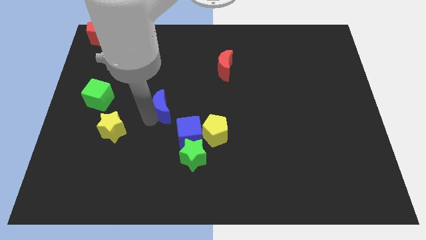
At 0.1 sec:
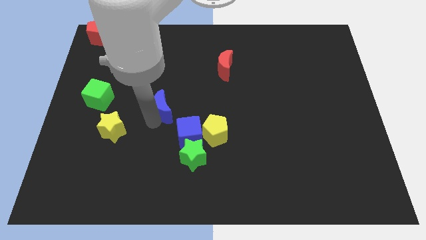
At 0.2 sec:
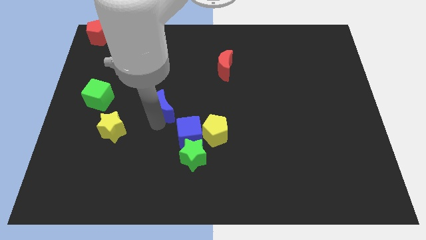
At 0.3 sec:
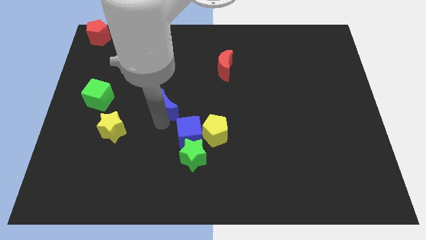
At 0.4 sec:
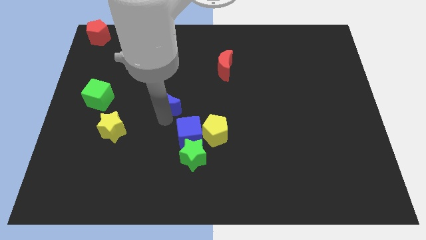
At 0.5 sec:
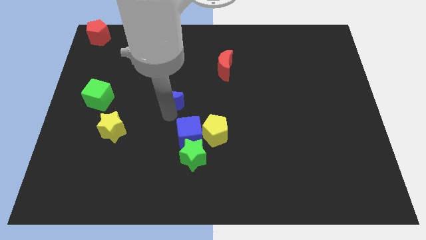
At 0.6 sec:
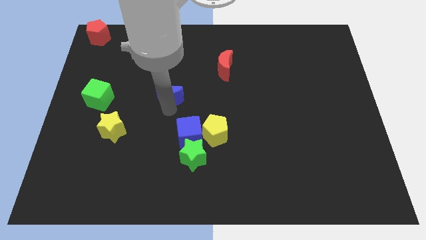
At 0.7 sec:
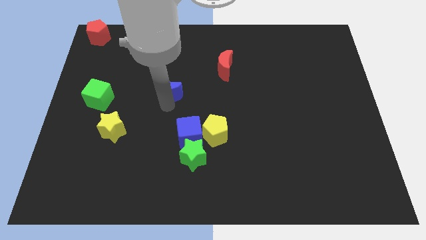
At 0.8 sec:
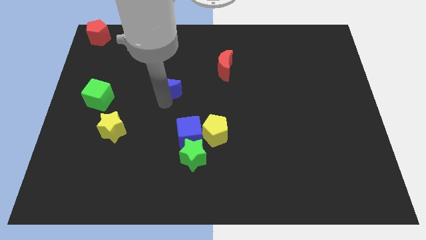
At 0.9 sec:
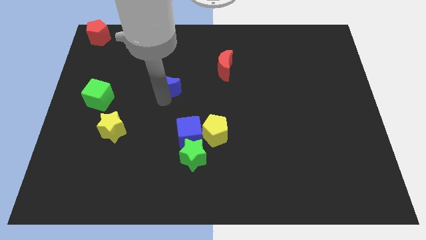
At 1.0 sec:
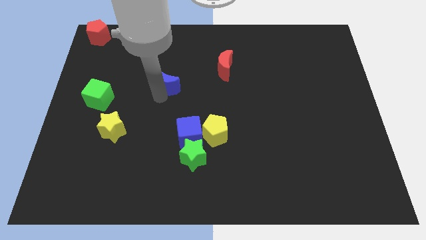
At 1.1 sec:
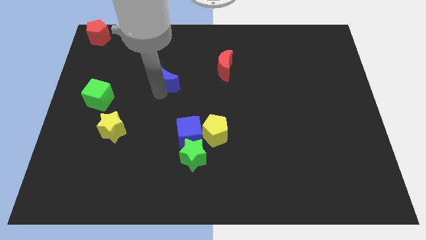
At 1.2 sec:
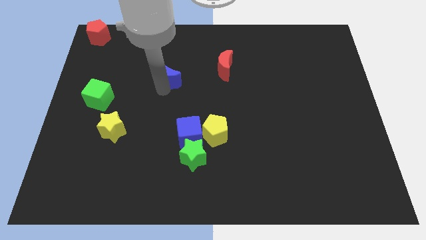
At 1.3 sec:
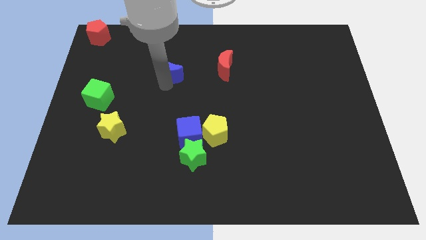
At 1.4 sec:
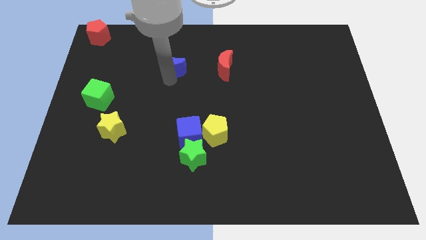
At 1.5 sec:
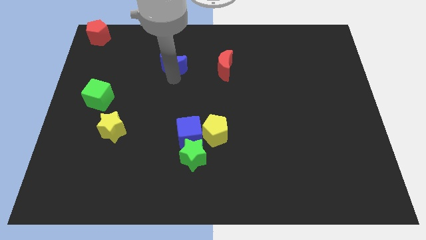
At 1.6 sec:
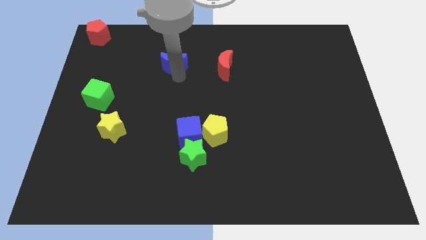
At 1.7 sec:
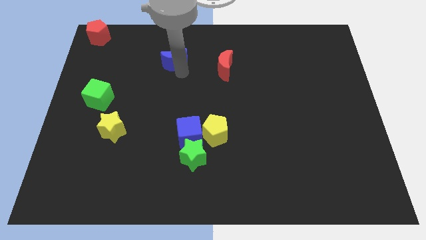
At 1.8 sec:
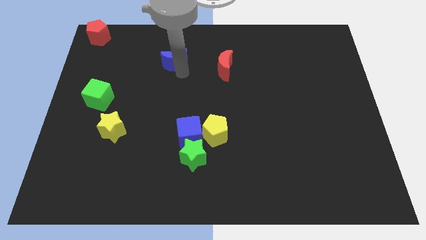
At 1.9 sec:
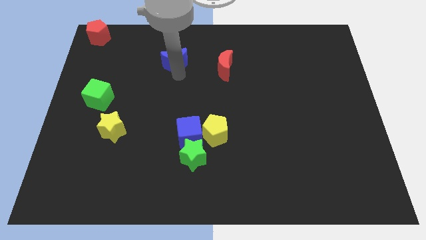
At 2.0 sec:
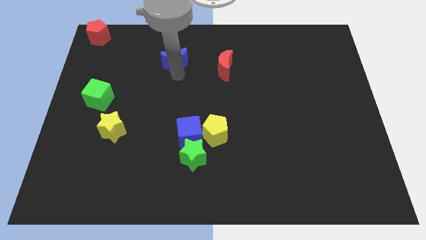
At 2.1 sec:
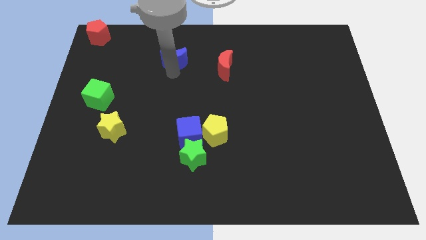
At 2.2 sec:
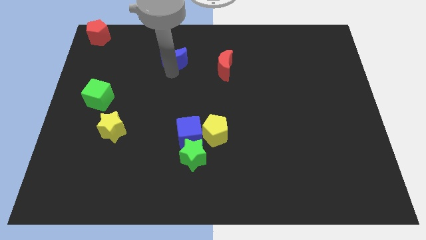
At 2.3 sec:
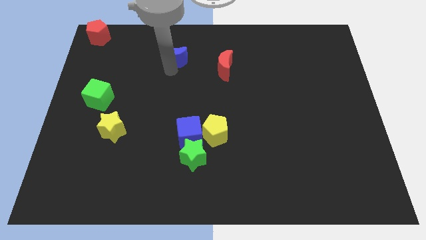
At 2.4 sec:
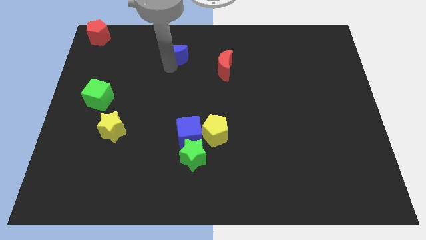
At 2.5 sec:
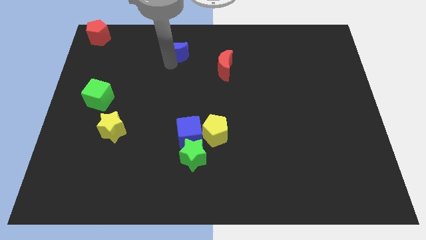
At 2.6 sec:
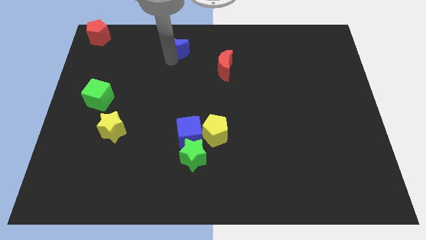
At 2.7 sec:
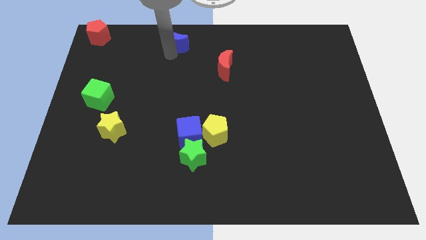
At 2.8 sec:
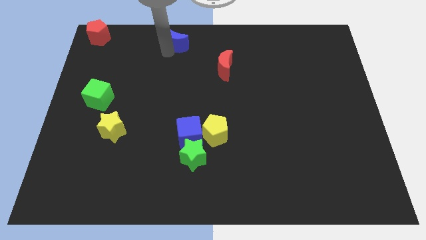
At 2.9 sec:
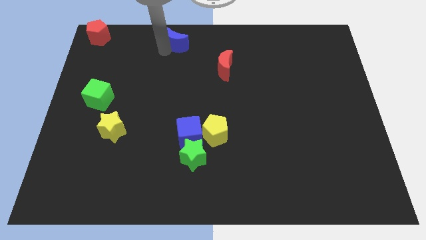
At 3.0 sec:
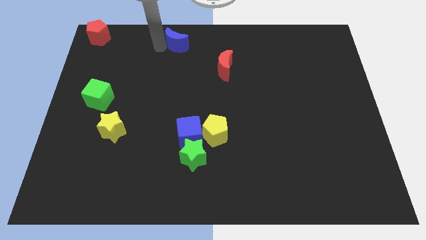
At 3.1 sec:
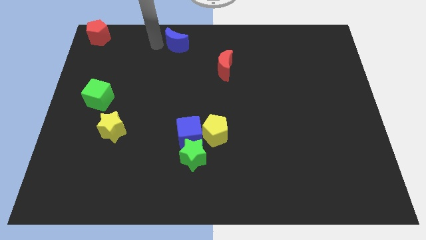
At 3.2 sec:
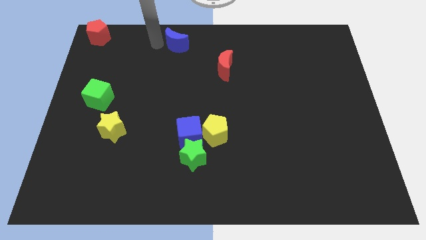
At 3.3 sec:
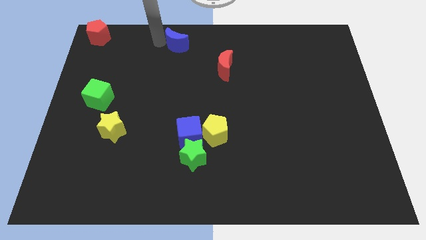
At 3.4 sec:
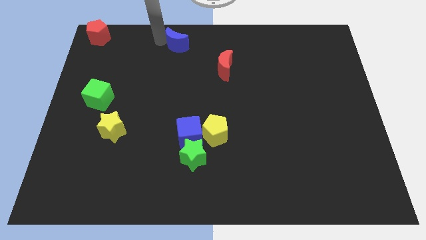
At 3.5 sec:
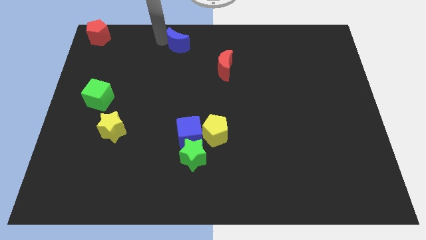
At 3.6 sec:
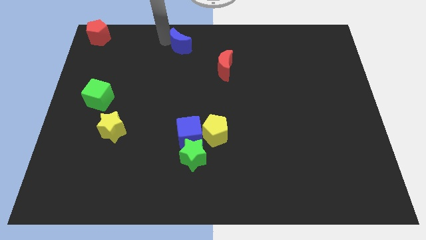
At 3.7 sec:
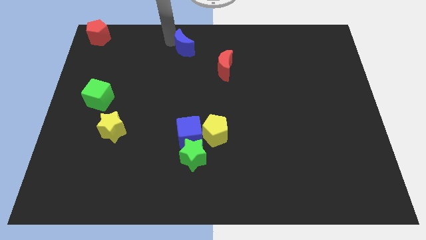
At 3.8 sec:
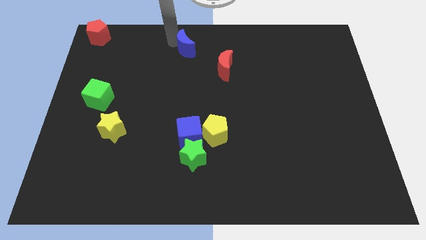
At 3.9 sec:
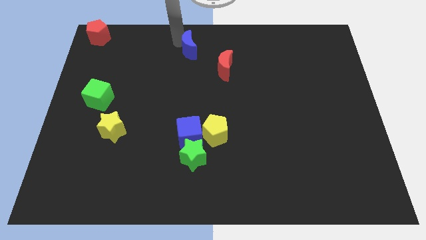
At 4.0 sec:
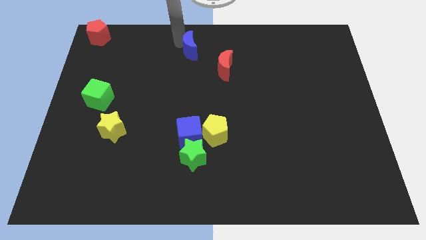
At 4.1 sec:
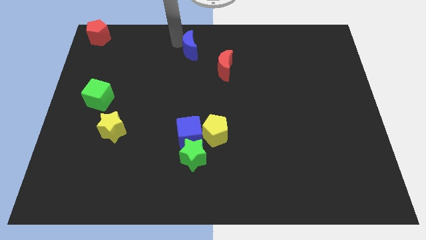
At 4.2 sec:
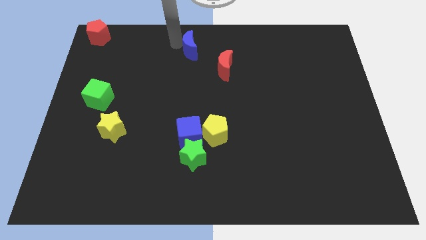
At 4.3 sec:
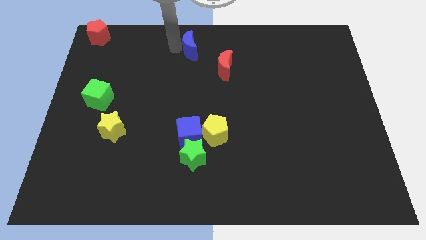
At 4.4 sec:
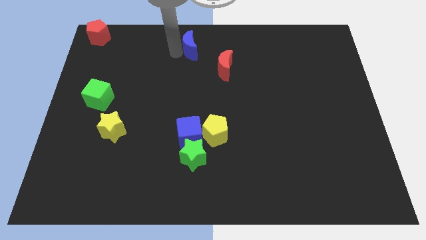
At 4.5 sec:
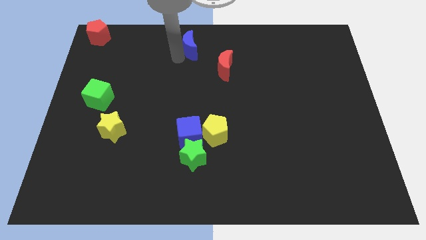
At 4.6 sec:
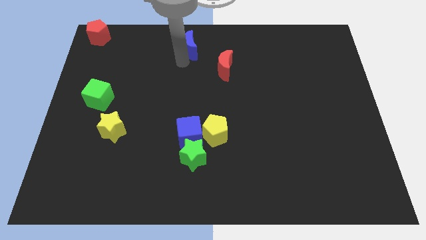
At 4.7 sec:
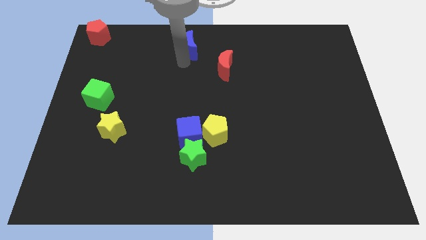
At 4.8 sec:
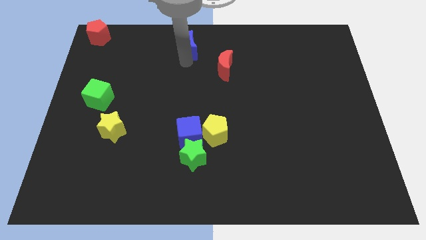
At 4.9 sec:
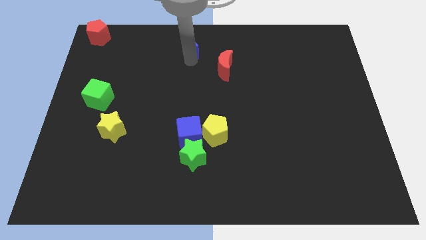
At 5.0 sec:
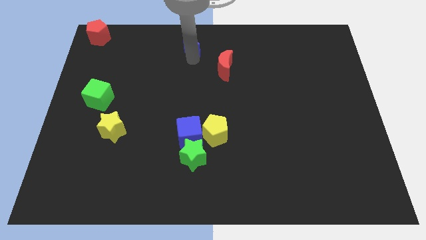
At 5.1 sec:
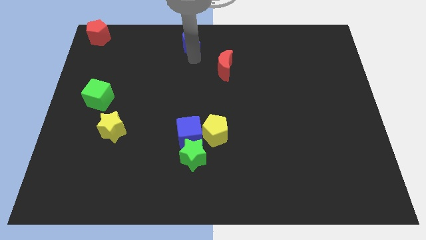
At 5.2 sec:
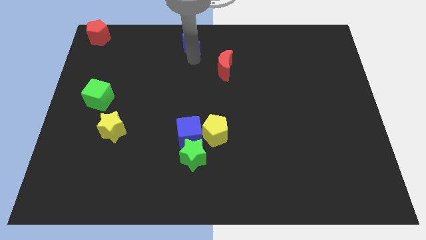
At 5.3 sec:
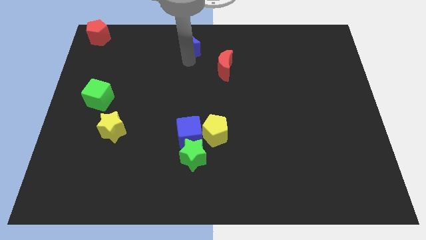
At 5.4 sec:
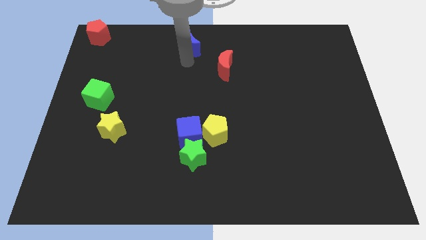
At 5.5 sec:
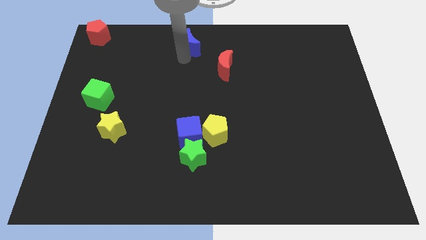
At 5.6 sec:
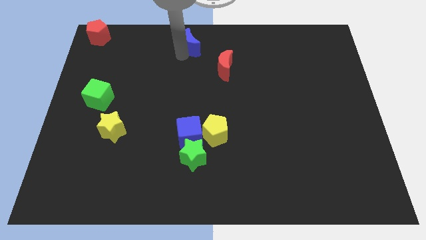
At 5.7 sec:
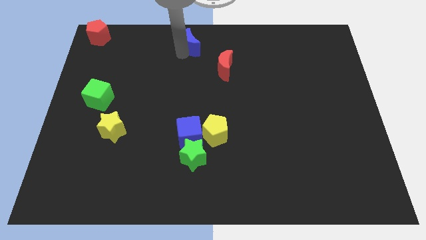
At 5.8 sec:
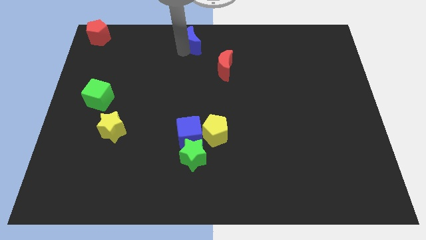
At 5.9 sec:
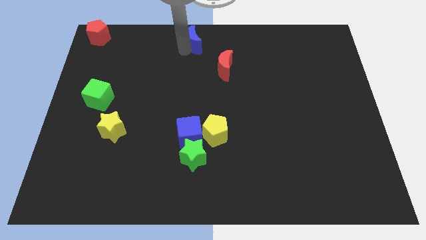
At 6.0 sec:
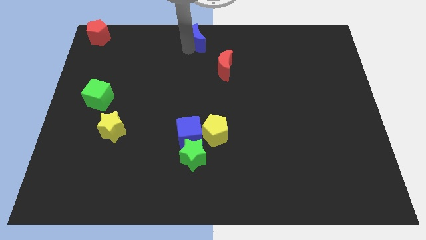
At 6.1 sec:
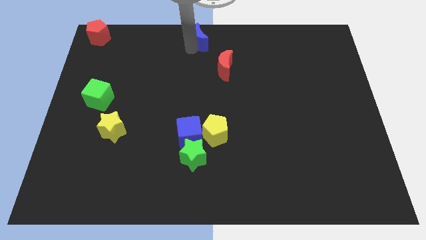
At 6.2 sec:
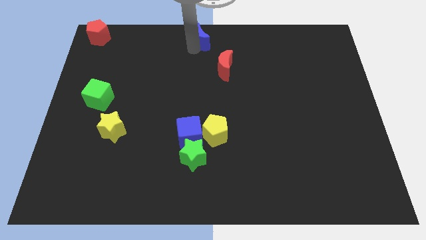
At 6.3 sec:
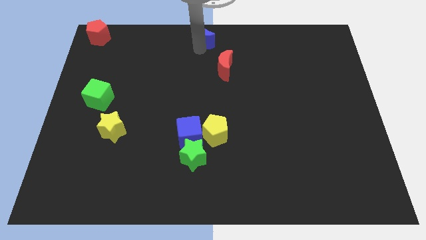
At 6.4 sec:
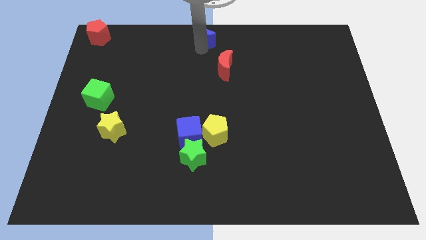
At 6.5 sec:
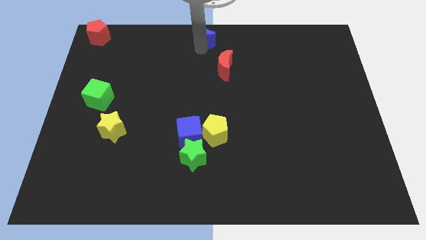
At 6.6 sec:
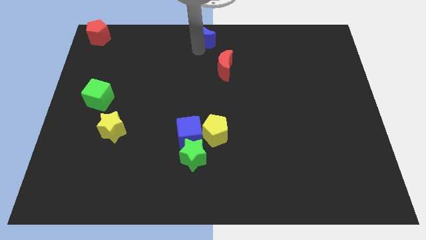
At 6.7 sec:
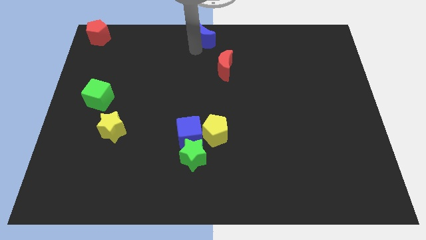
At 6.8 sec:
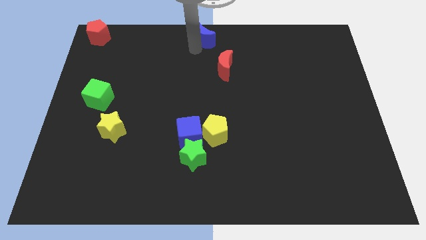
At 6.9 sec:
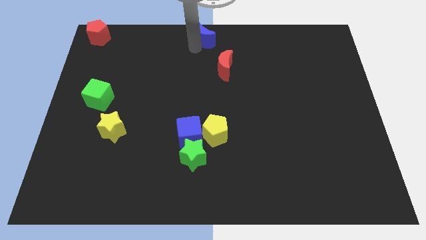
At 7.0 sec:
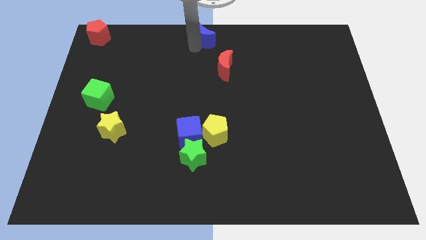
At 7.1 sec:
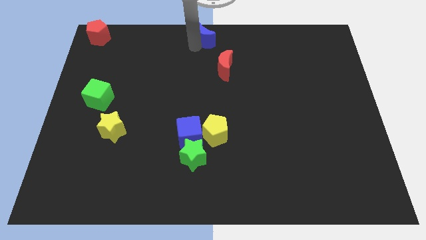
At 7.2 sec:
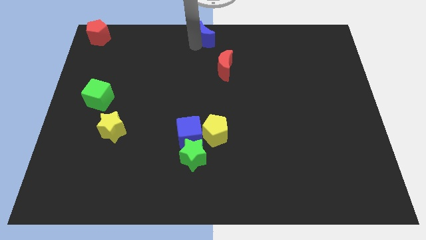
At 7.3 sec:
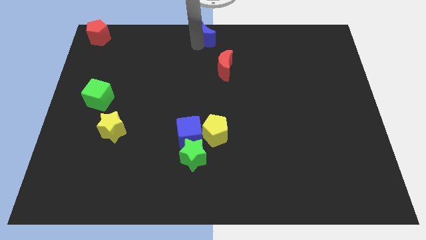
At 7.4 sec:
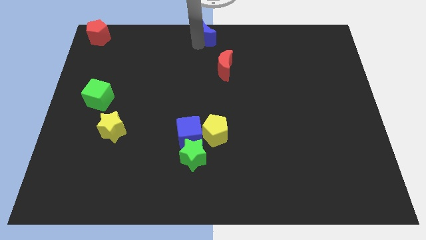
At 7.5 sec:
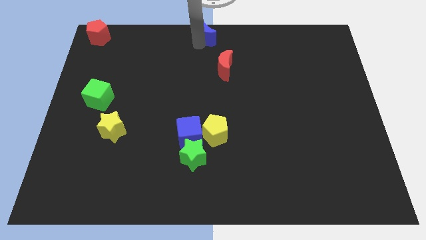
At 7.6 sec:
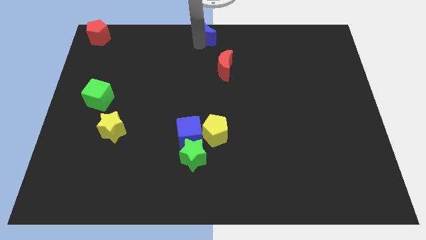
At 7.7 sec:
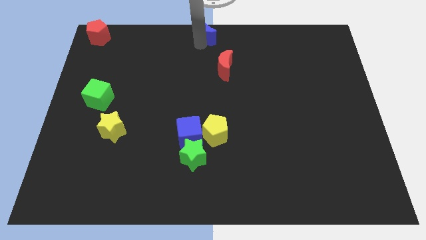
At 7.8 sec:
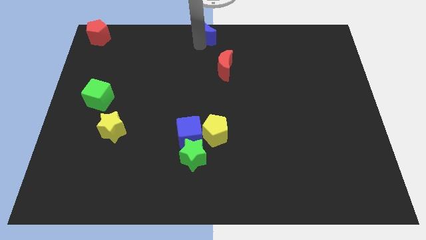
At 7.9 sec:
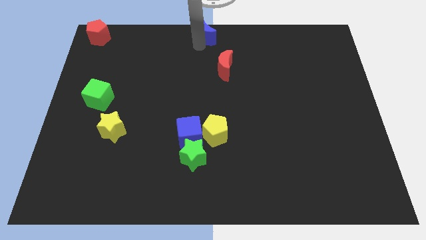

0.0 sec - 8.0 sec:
move the blue crescent to the top center on the board

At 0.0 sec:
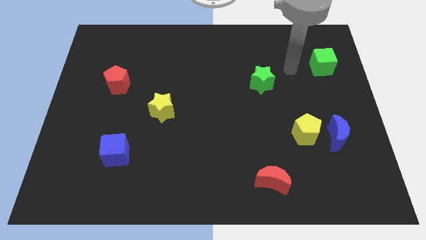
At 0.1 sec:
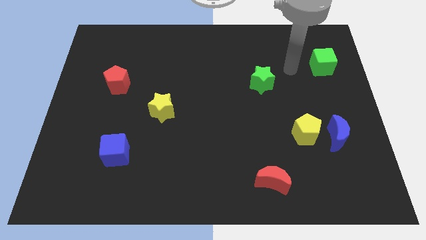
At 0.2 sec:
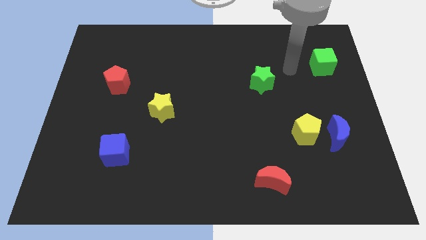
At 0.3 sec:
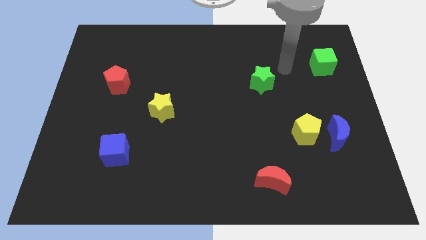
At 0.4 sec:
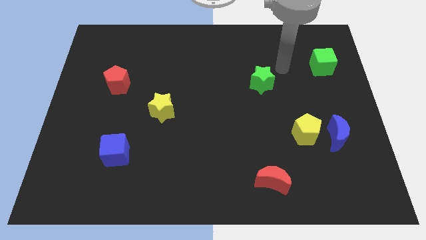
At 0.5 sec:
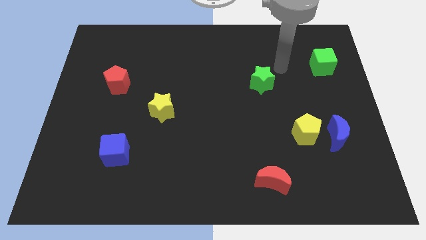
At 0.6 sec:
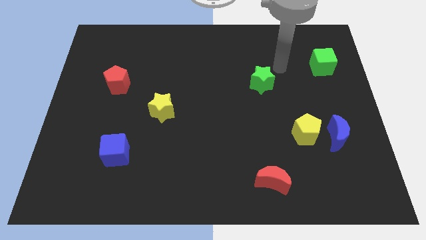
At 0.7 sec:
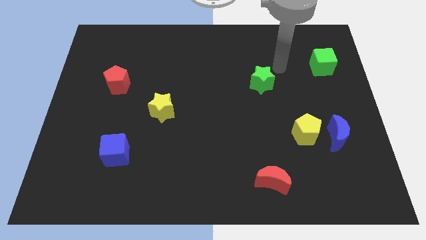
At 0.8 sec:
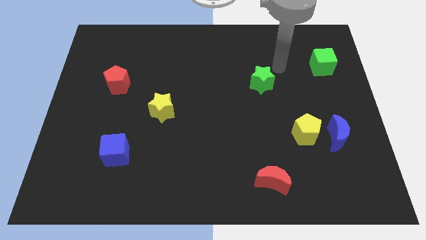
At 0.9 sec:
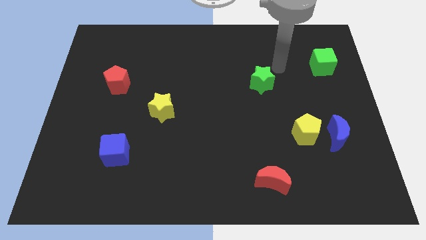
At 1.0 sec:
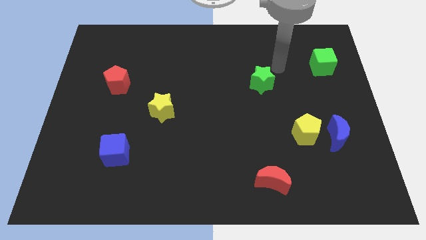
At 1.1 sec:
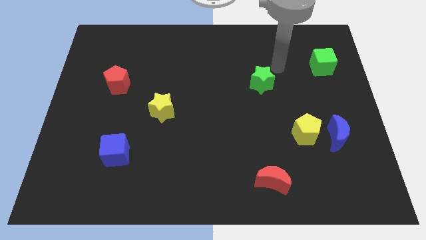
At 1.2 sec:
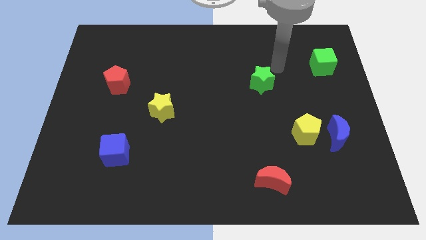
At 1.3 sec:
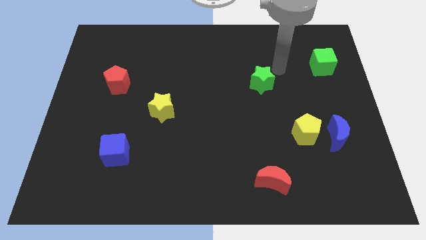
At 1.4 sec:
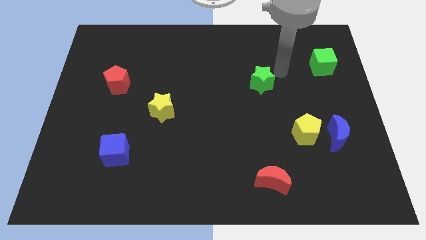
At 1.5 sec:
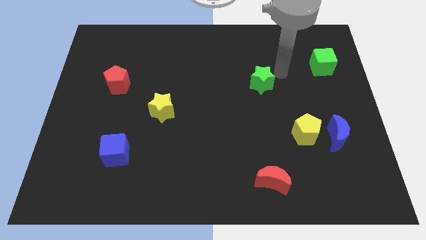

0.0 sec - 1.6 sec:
move the arm towards the green star
